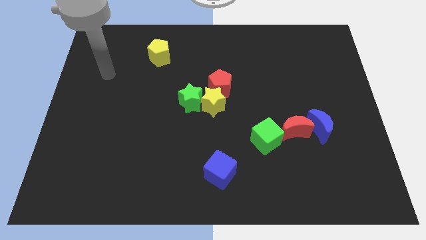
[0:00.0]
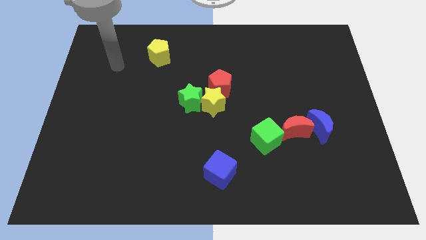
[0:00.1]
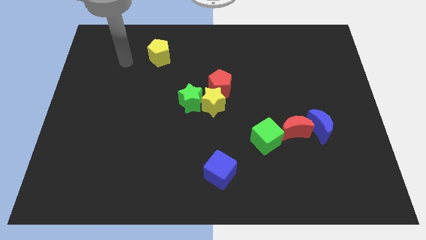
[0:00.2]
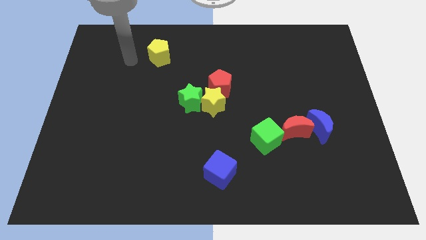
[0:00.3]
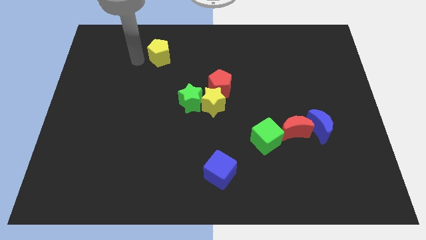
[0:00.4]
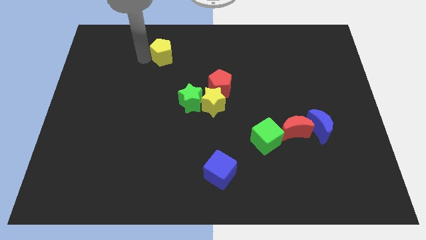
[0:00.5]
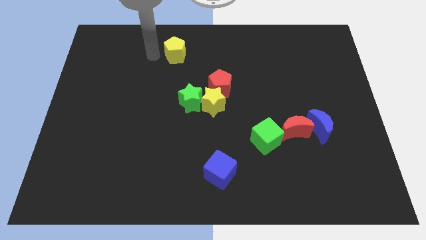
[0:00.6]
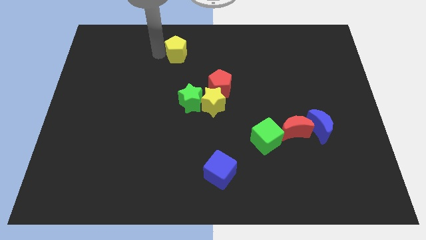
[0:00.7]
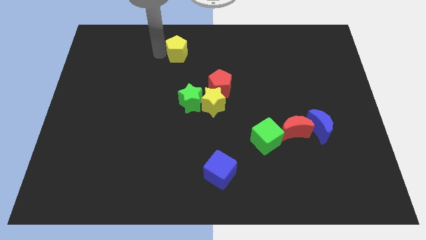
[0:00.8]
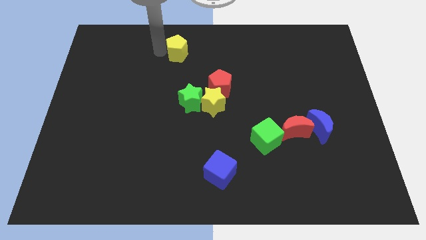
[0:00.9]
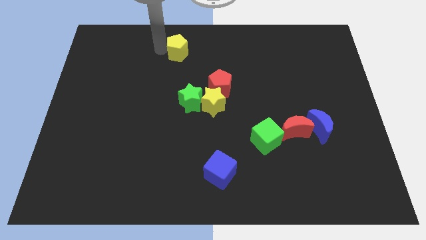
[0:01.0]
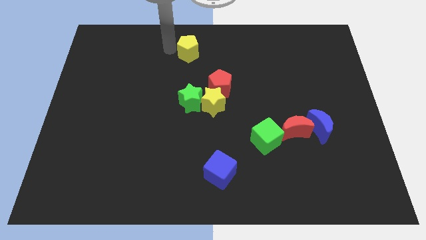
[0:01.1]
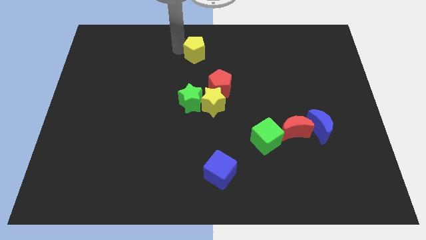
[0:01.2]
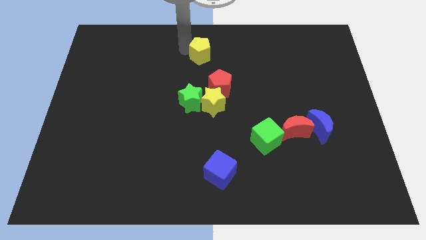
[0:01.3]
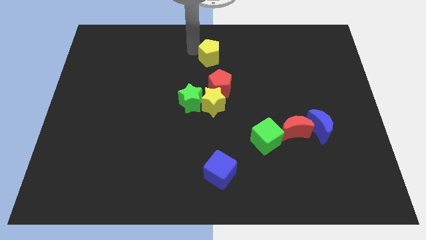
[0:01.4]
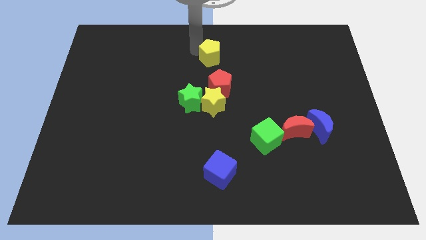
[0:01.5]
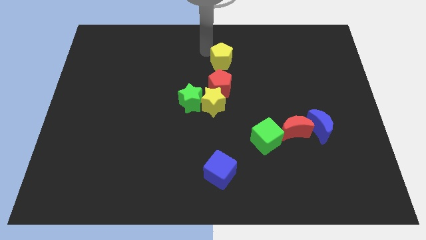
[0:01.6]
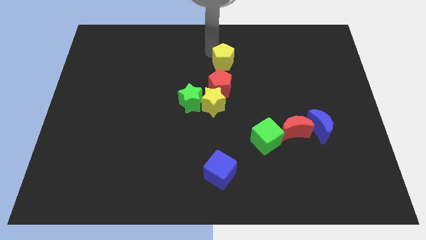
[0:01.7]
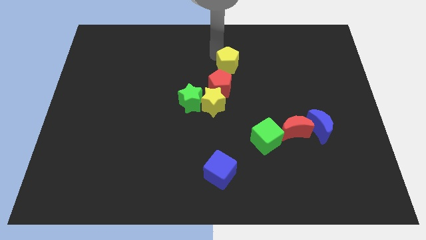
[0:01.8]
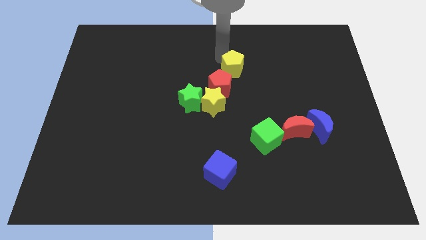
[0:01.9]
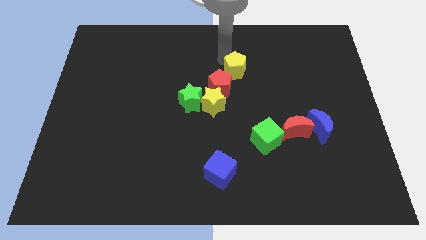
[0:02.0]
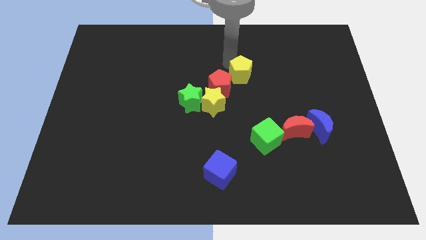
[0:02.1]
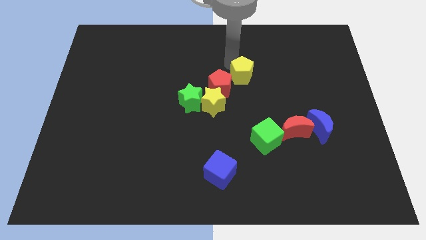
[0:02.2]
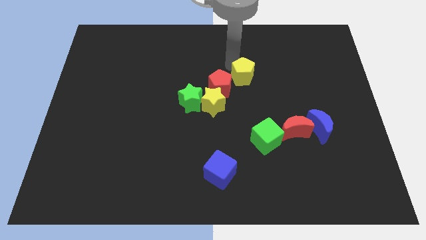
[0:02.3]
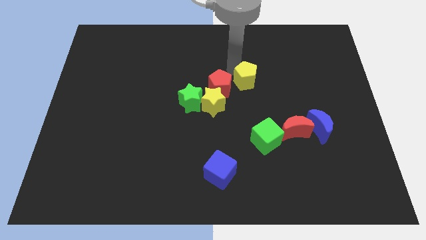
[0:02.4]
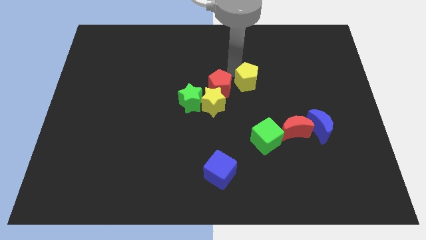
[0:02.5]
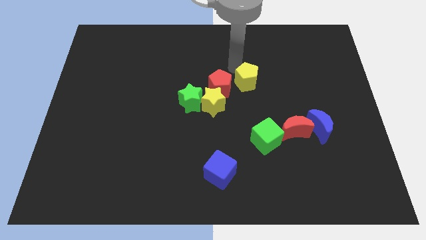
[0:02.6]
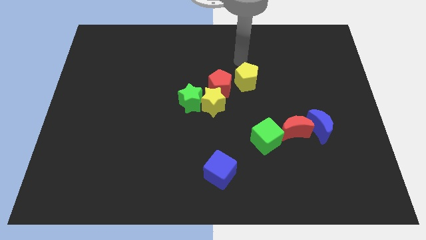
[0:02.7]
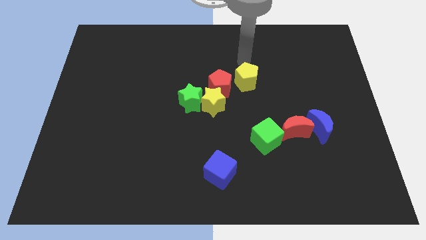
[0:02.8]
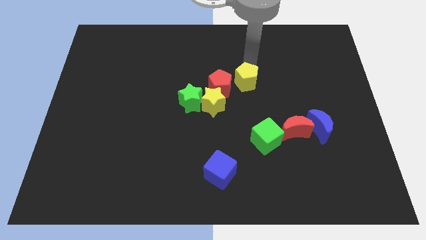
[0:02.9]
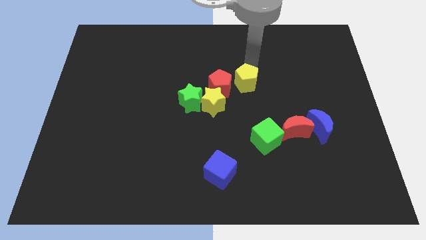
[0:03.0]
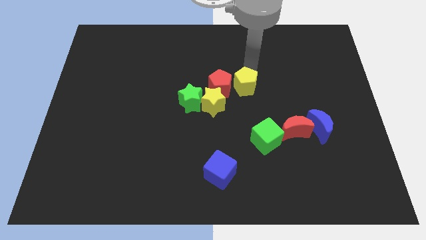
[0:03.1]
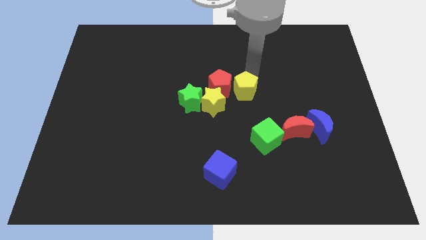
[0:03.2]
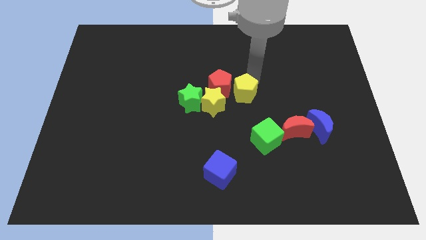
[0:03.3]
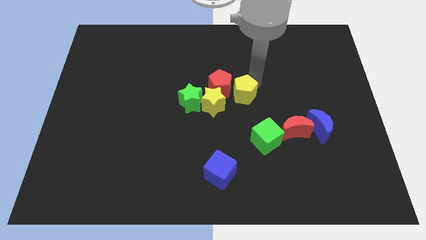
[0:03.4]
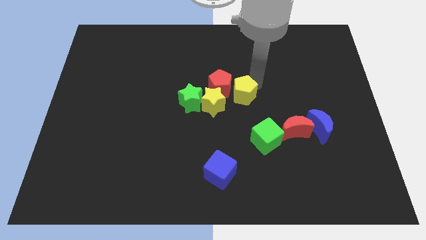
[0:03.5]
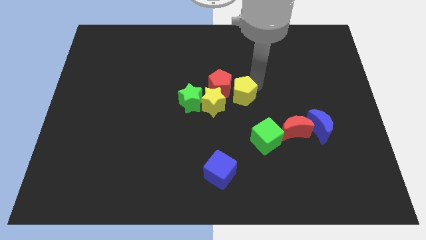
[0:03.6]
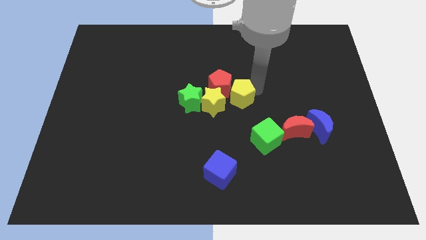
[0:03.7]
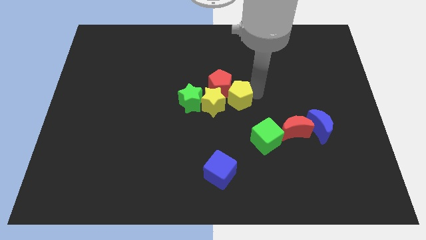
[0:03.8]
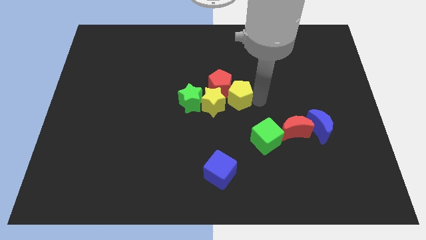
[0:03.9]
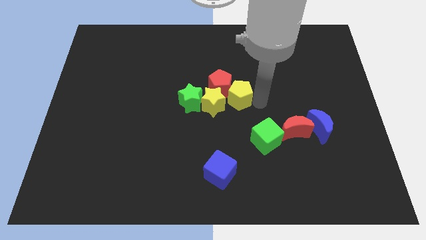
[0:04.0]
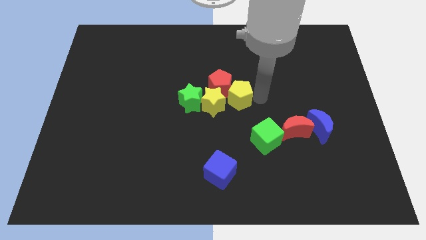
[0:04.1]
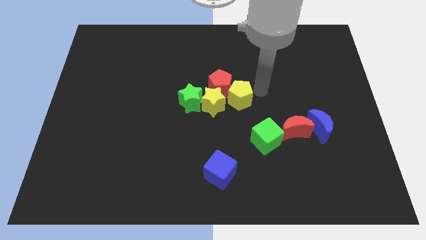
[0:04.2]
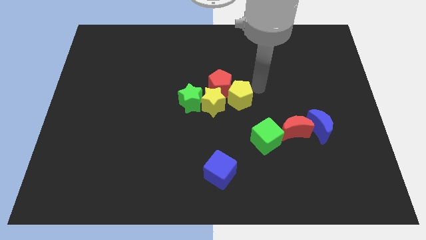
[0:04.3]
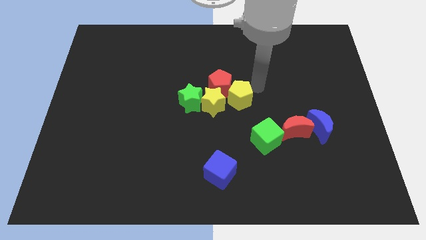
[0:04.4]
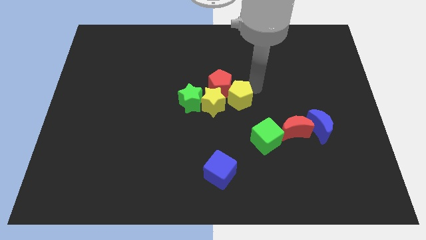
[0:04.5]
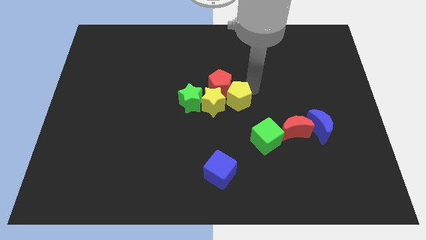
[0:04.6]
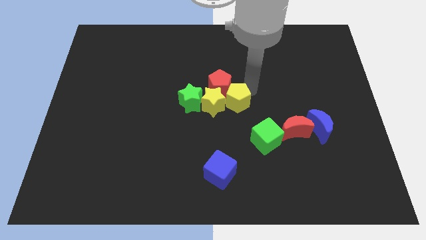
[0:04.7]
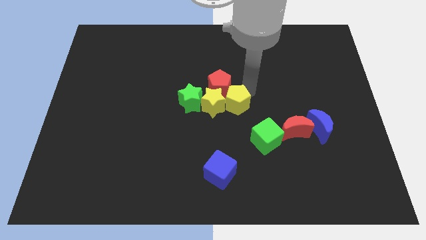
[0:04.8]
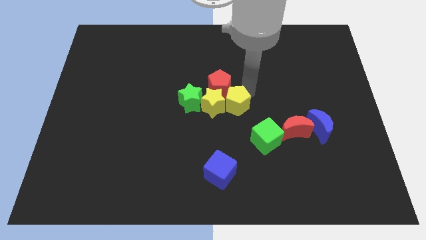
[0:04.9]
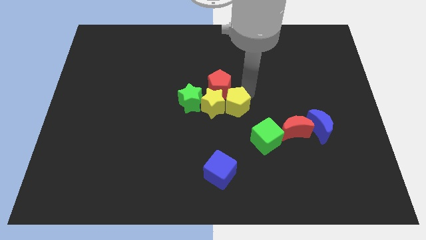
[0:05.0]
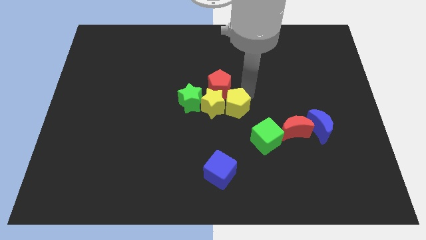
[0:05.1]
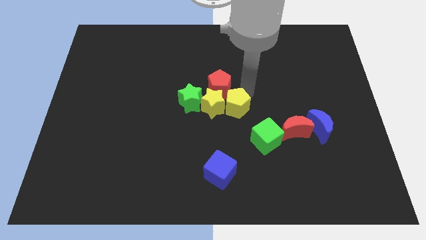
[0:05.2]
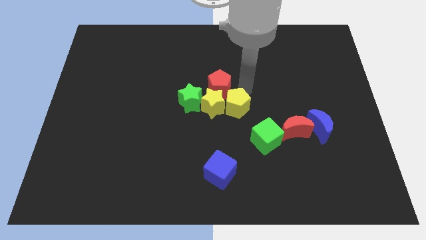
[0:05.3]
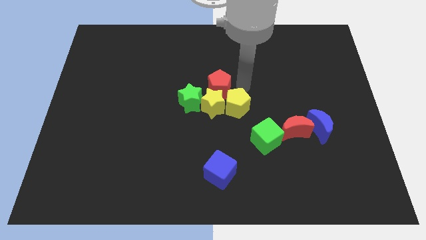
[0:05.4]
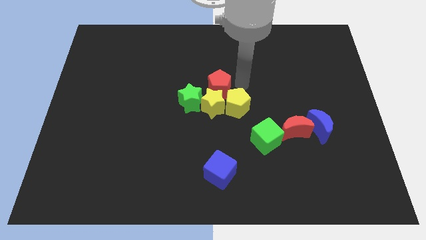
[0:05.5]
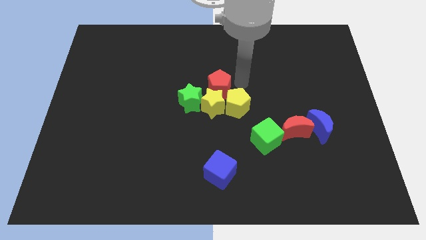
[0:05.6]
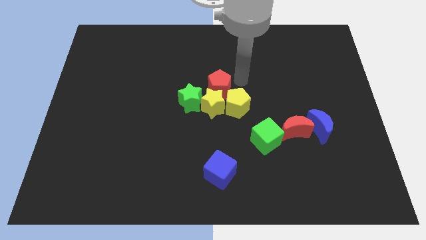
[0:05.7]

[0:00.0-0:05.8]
push the yellow pentagon to the right side of the yellow star

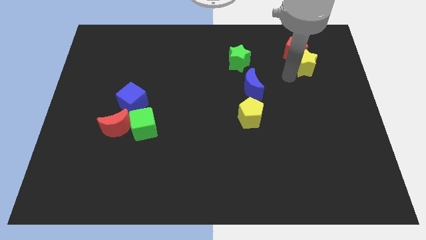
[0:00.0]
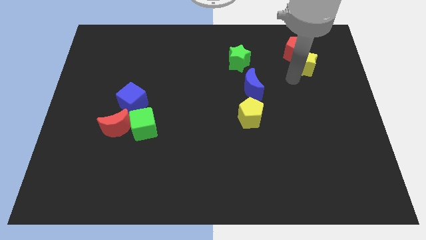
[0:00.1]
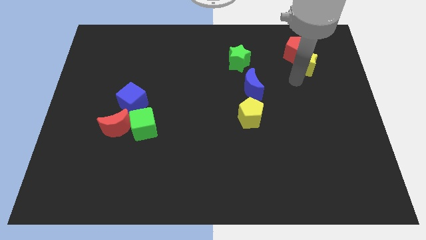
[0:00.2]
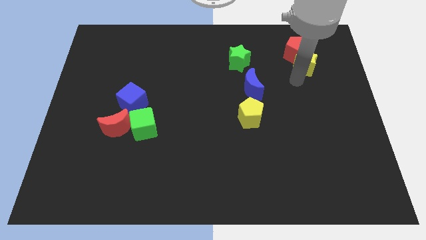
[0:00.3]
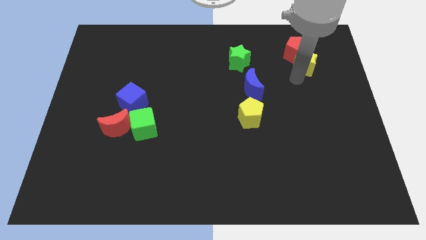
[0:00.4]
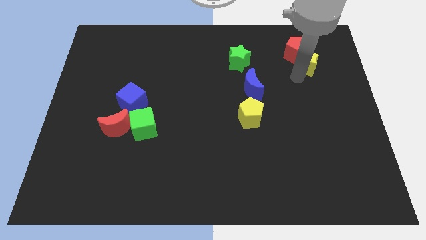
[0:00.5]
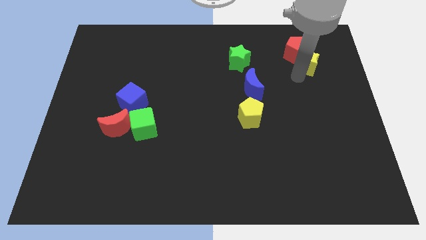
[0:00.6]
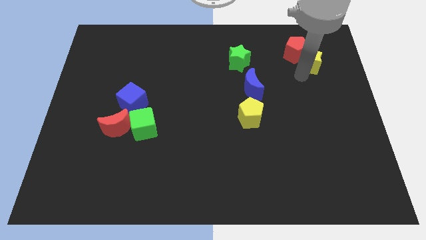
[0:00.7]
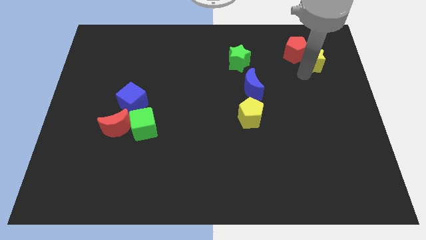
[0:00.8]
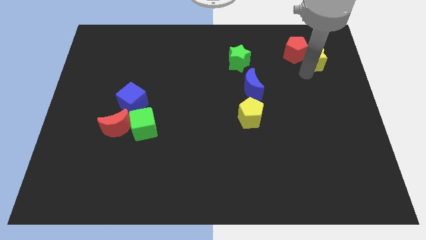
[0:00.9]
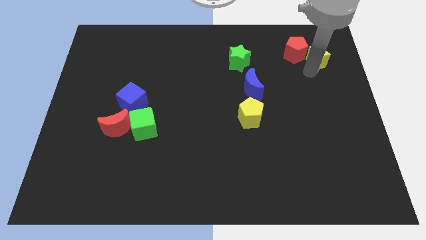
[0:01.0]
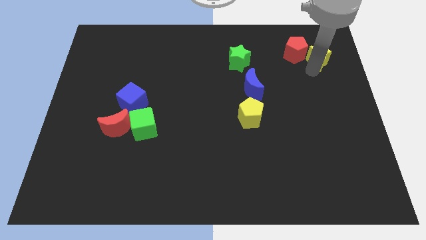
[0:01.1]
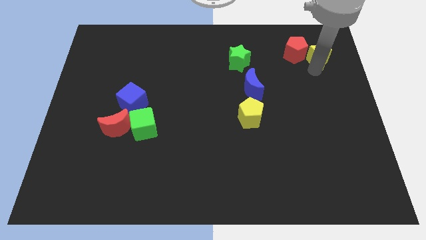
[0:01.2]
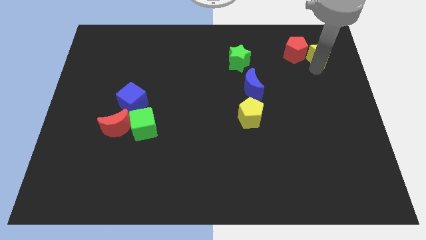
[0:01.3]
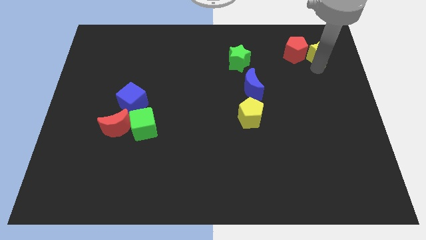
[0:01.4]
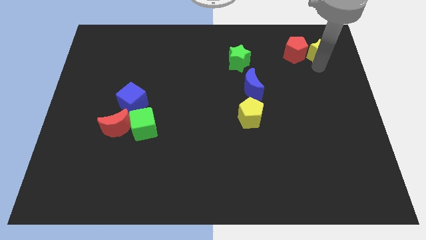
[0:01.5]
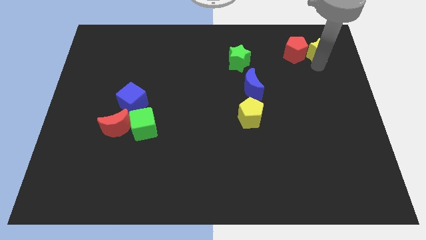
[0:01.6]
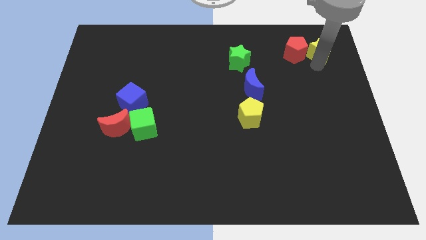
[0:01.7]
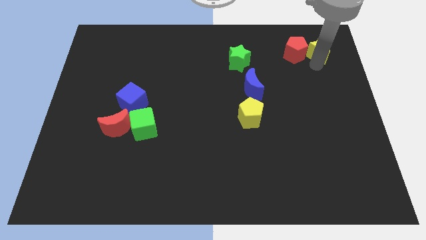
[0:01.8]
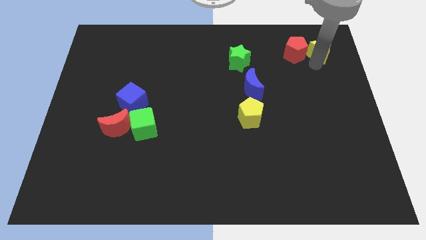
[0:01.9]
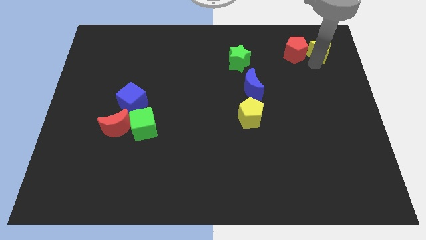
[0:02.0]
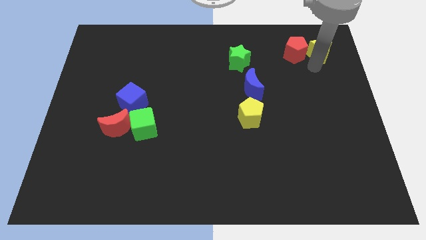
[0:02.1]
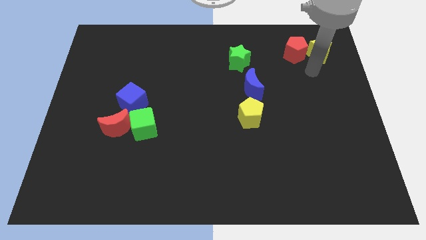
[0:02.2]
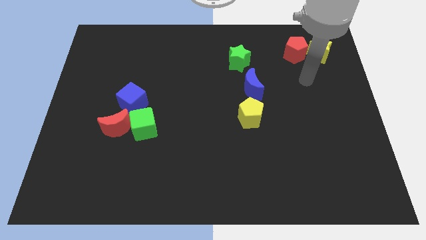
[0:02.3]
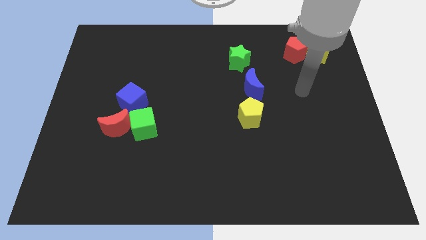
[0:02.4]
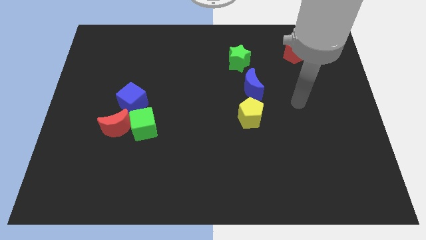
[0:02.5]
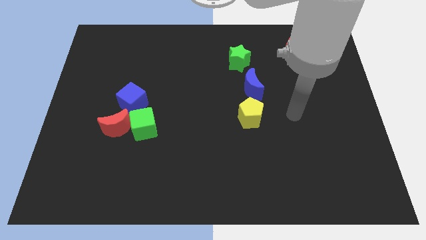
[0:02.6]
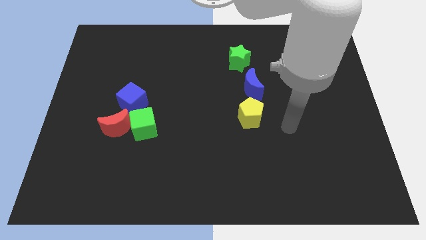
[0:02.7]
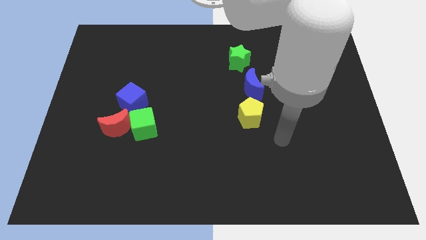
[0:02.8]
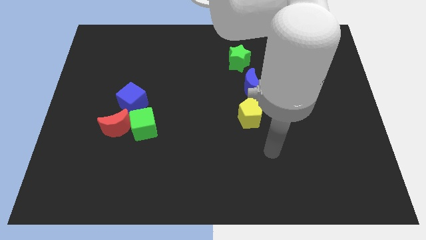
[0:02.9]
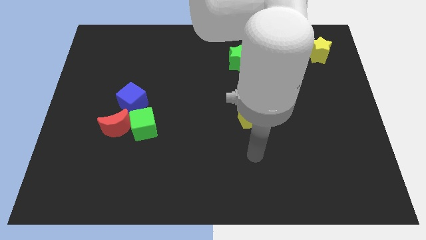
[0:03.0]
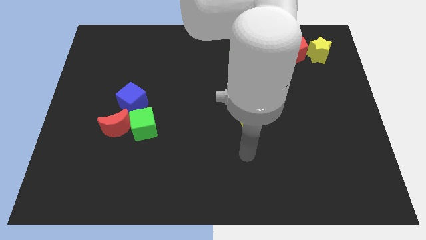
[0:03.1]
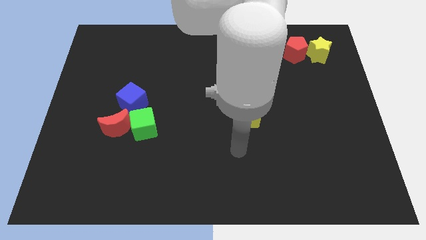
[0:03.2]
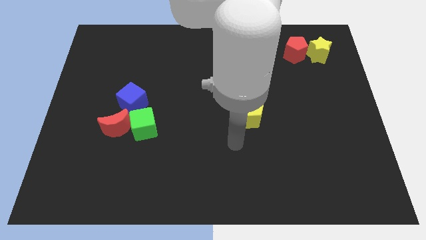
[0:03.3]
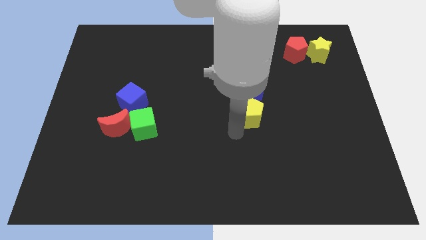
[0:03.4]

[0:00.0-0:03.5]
place the yellow star right to the red pentagon
